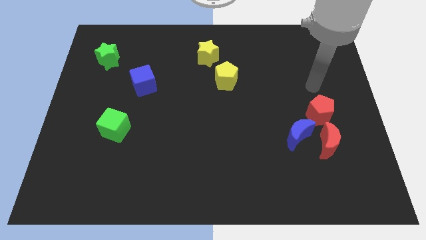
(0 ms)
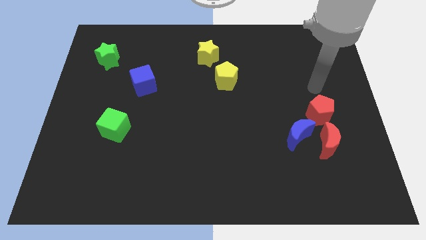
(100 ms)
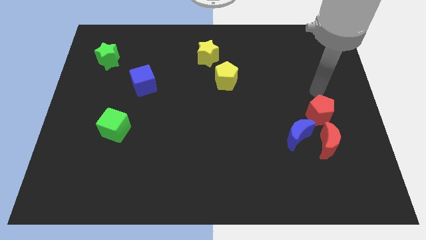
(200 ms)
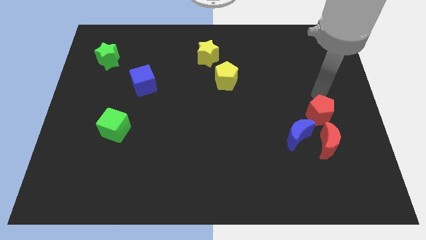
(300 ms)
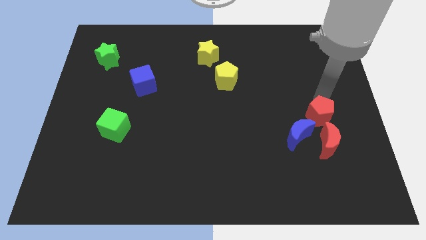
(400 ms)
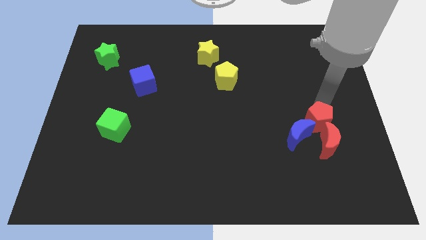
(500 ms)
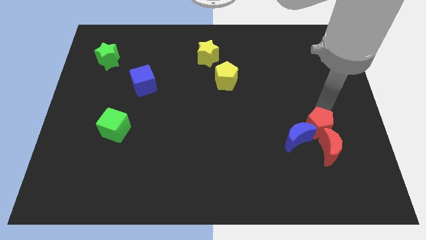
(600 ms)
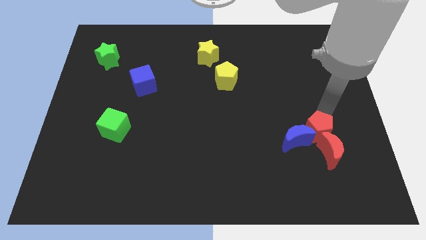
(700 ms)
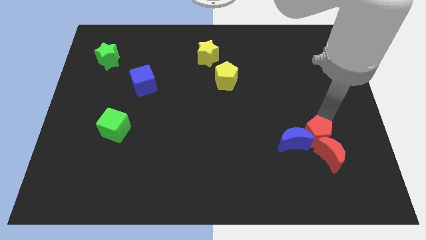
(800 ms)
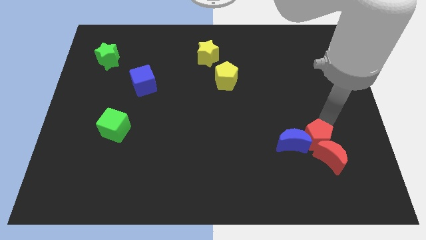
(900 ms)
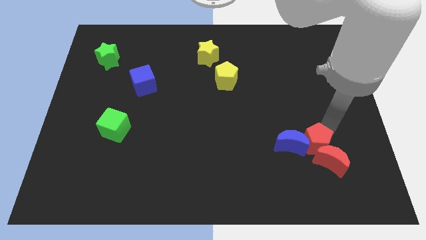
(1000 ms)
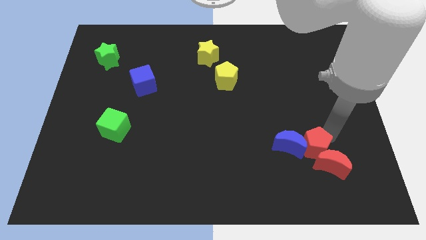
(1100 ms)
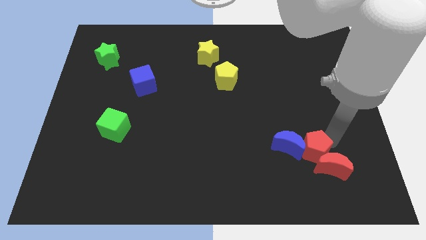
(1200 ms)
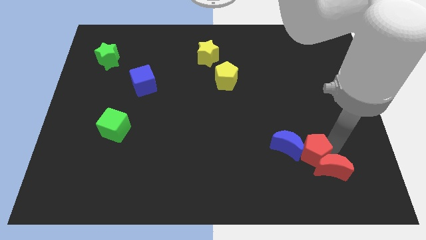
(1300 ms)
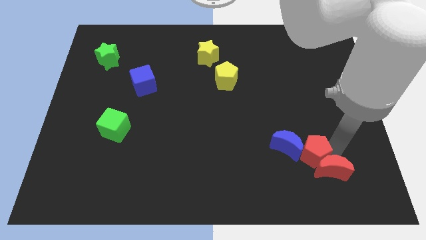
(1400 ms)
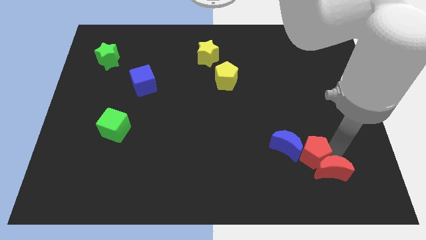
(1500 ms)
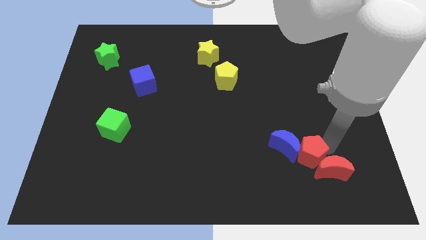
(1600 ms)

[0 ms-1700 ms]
slide the red pentagon in between the blue moon and red crescent

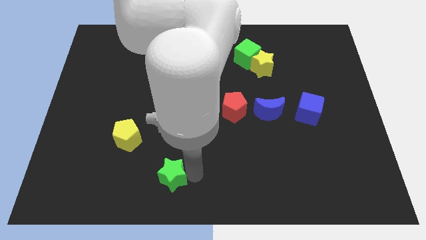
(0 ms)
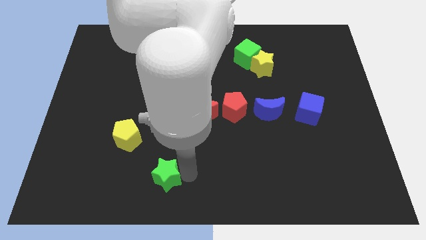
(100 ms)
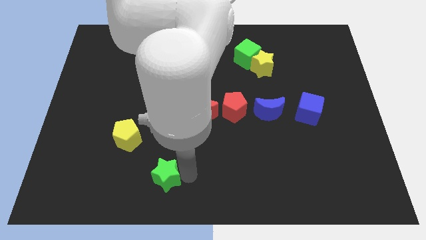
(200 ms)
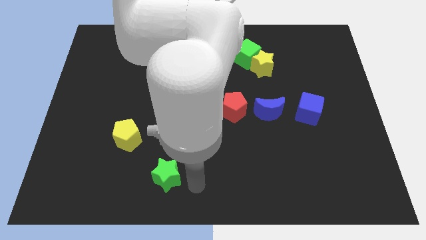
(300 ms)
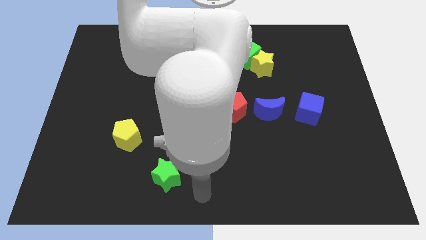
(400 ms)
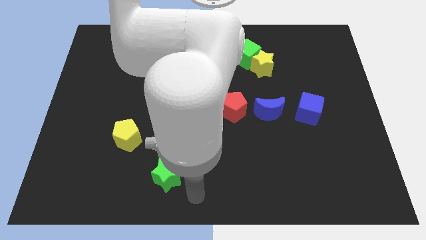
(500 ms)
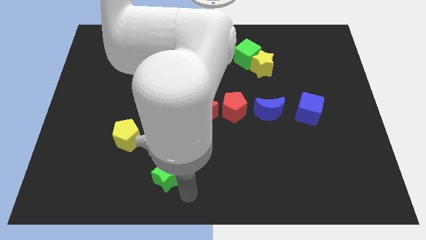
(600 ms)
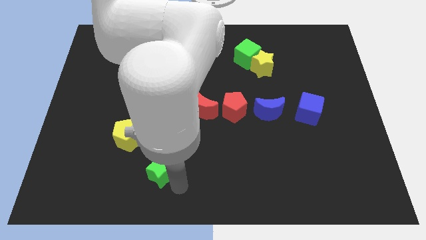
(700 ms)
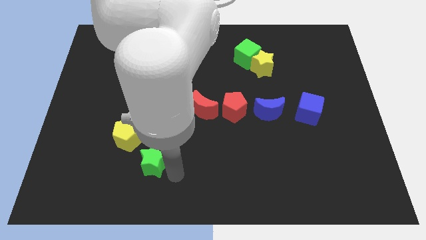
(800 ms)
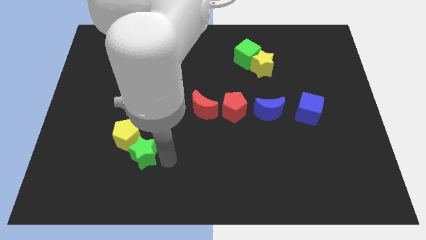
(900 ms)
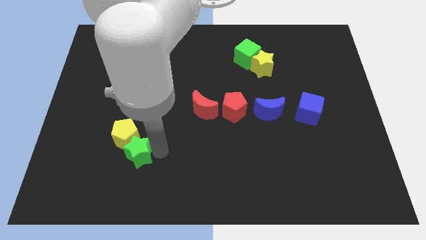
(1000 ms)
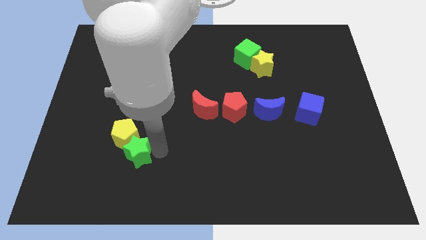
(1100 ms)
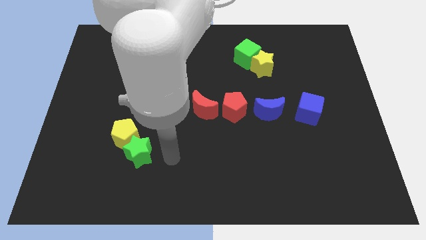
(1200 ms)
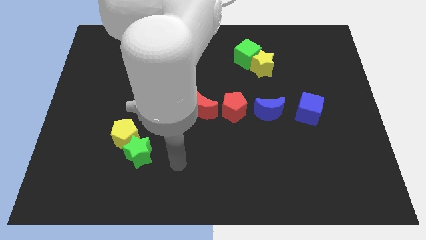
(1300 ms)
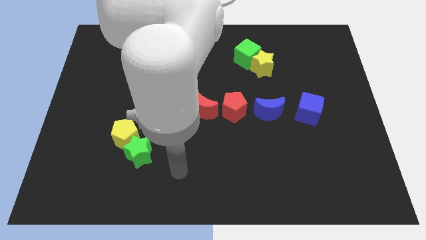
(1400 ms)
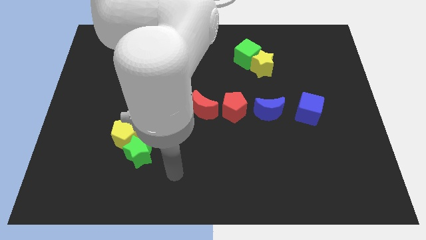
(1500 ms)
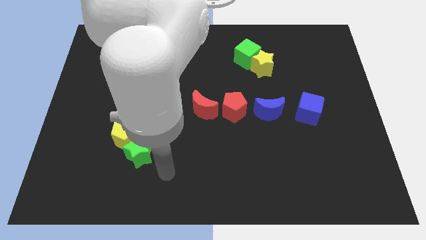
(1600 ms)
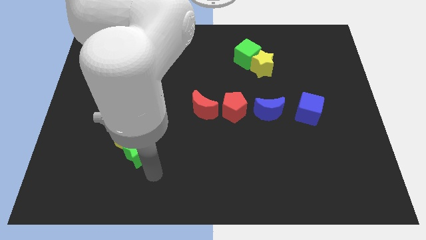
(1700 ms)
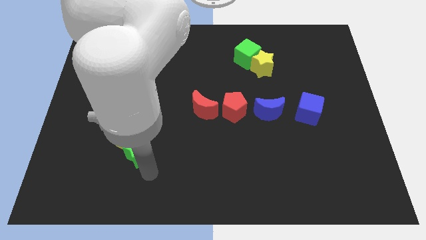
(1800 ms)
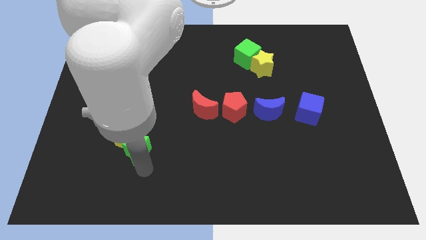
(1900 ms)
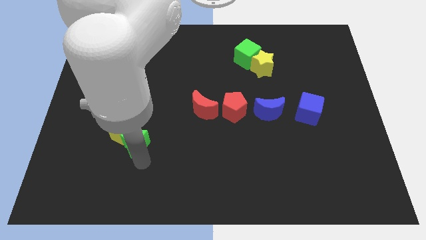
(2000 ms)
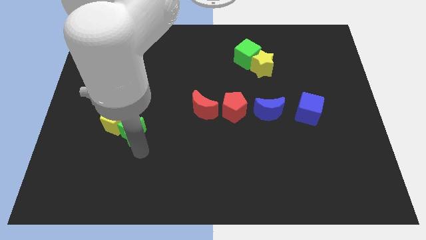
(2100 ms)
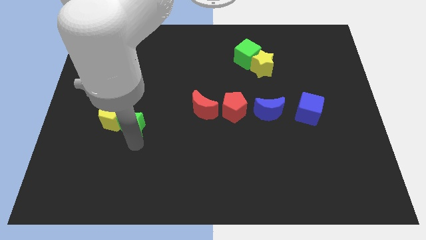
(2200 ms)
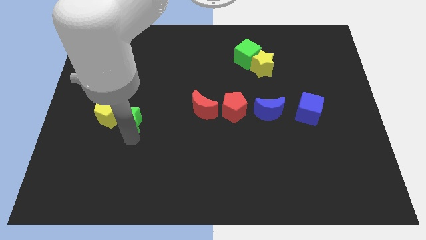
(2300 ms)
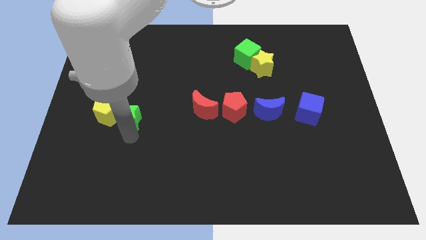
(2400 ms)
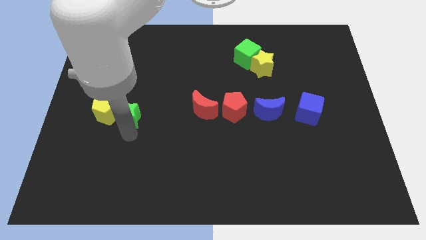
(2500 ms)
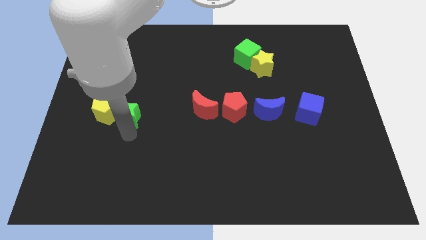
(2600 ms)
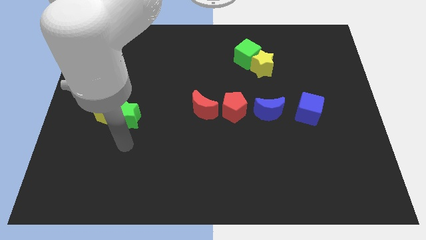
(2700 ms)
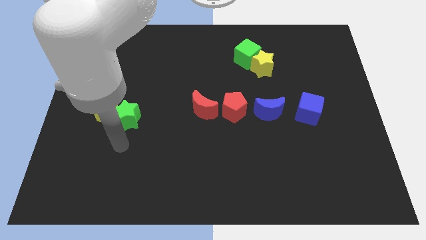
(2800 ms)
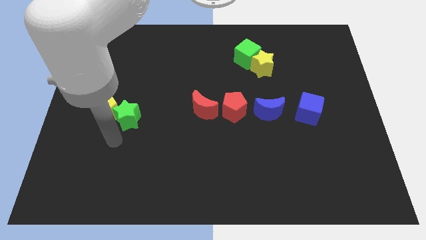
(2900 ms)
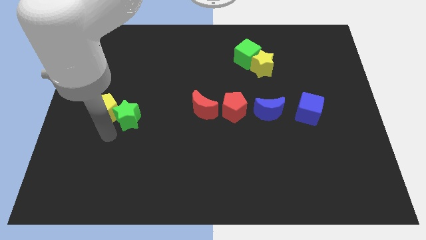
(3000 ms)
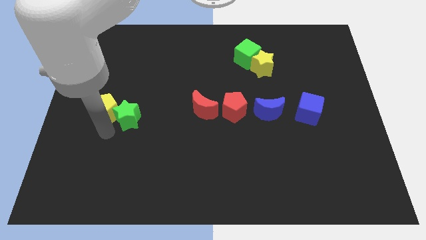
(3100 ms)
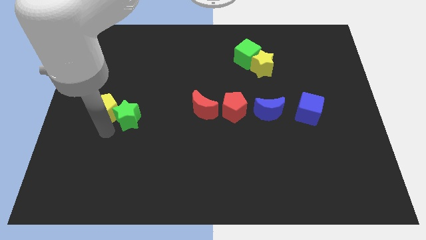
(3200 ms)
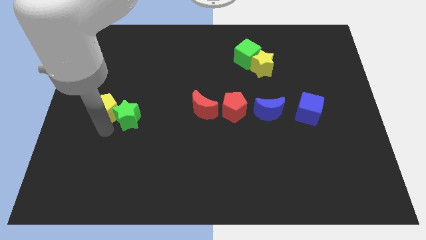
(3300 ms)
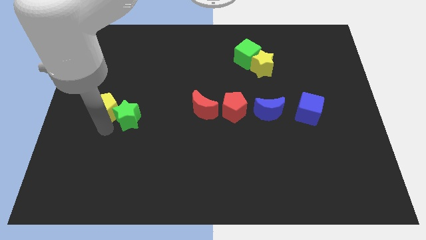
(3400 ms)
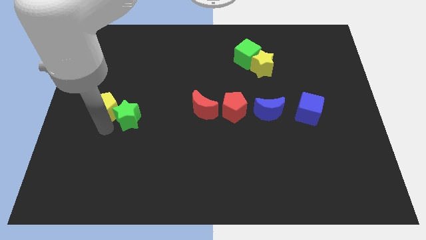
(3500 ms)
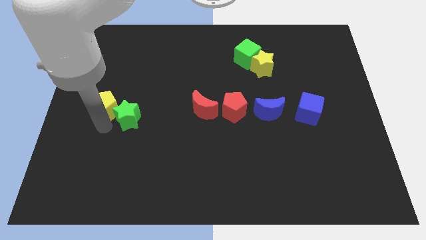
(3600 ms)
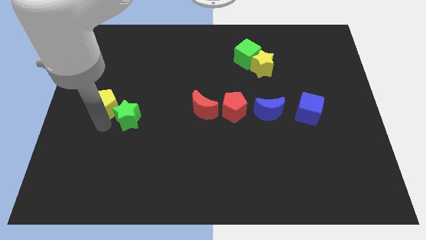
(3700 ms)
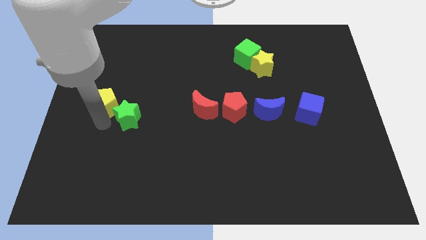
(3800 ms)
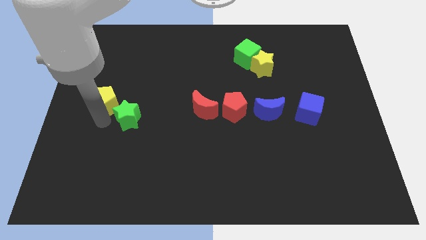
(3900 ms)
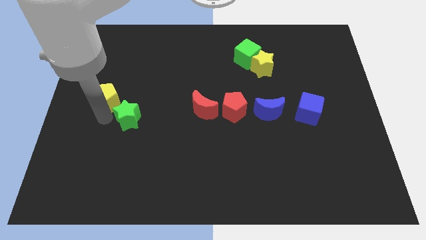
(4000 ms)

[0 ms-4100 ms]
move the green star and yellow pentagon towards center left

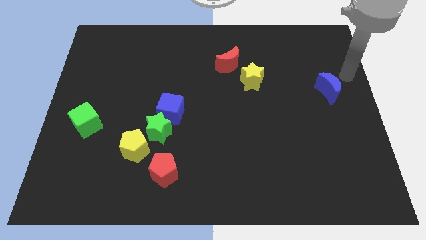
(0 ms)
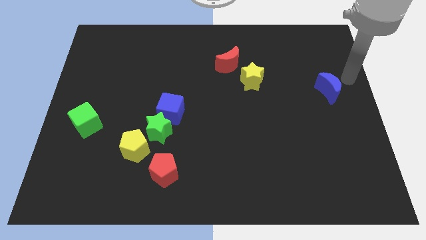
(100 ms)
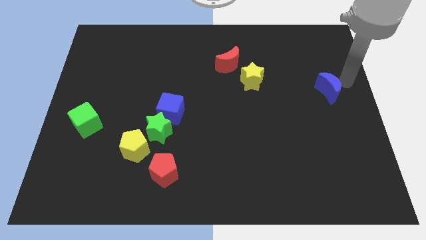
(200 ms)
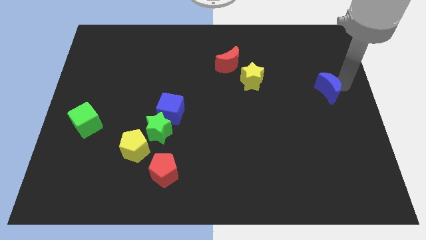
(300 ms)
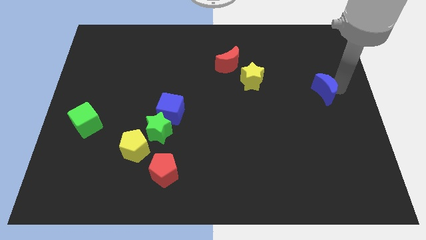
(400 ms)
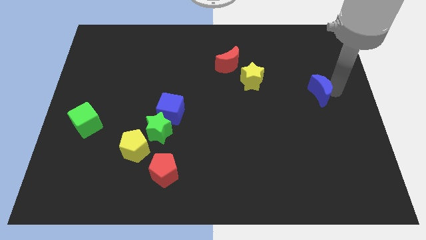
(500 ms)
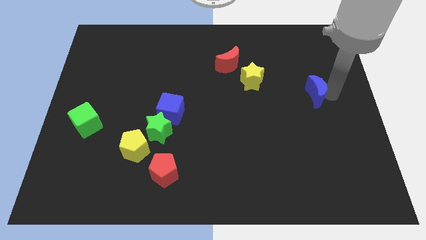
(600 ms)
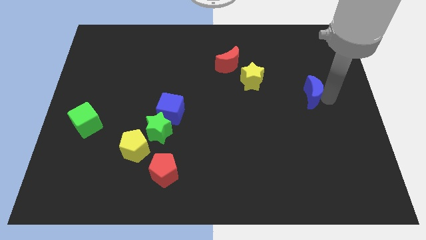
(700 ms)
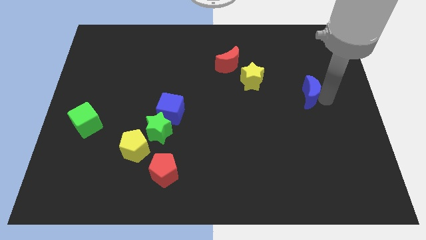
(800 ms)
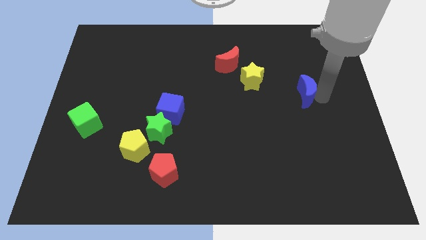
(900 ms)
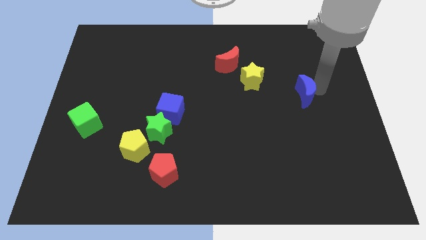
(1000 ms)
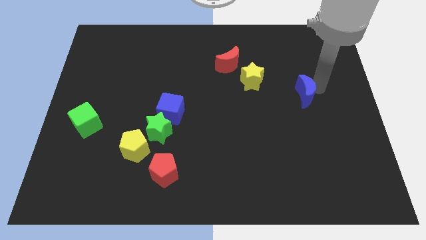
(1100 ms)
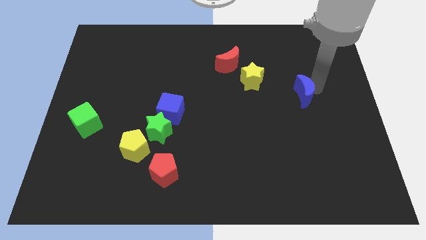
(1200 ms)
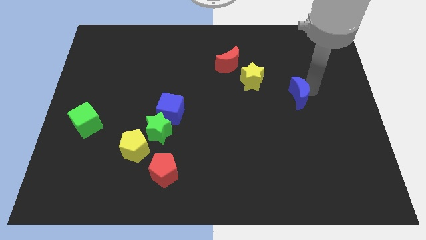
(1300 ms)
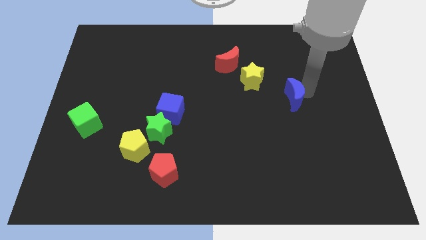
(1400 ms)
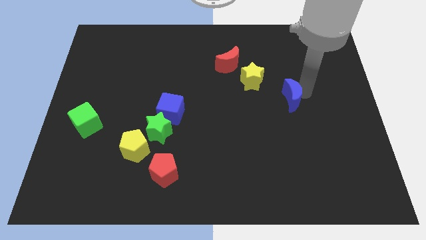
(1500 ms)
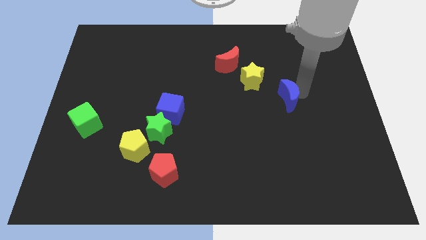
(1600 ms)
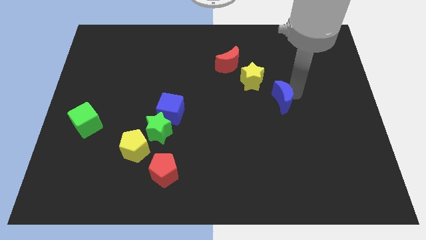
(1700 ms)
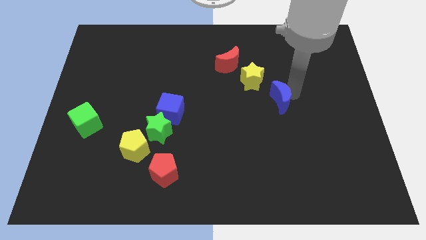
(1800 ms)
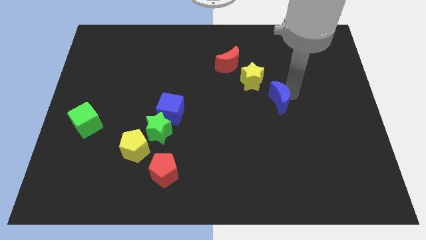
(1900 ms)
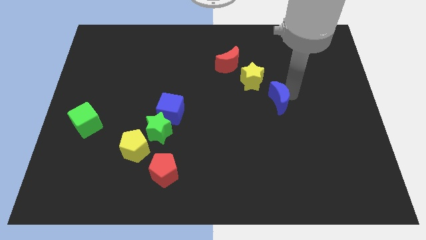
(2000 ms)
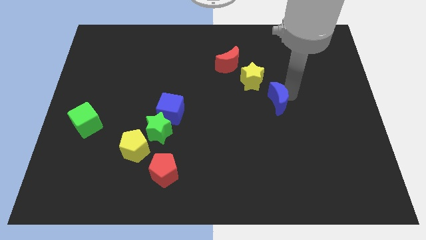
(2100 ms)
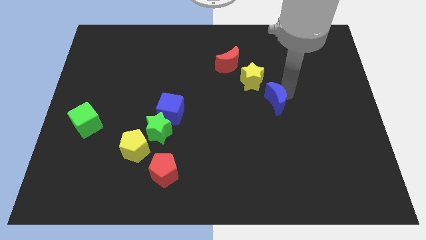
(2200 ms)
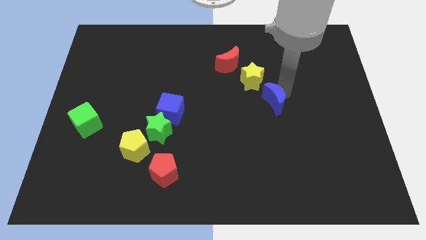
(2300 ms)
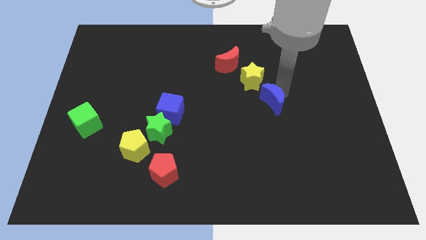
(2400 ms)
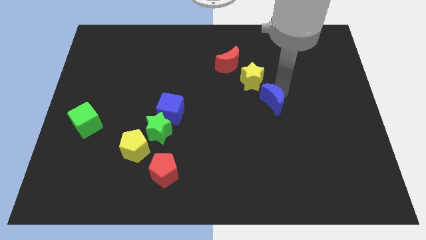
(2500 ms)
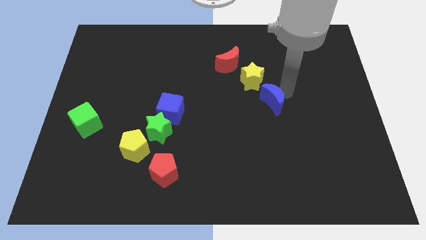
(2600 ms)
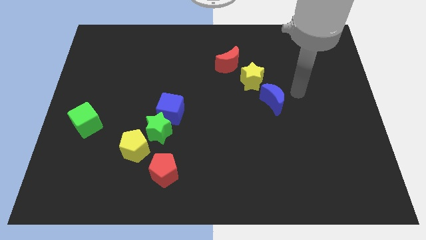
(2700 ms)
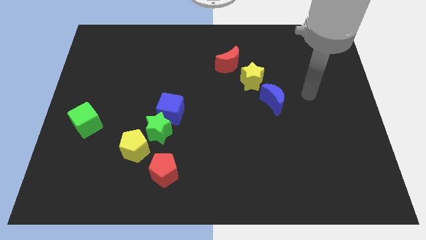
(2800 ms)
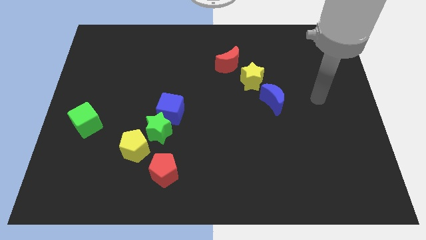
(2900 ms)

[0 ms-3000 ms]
move blue crescent towards yellow star

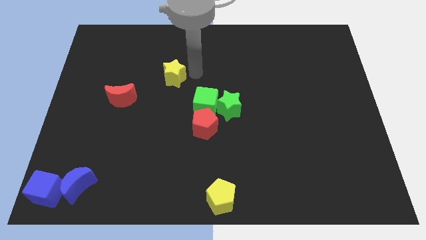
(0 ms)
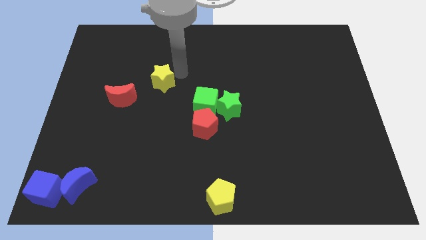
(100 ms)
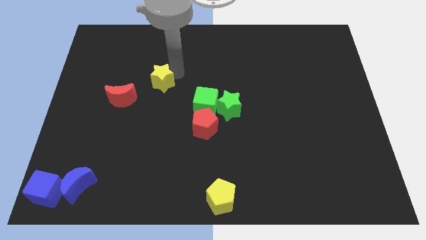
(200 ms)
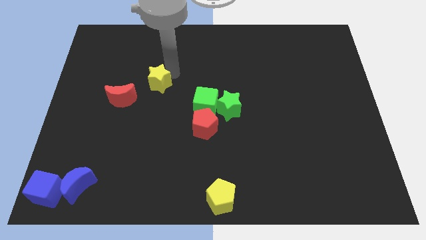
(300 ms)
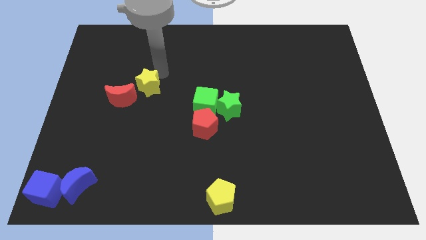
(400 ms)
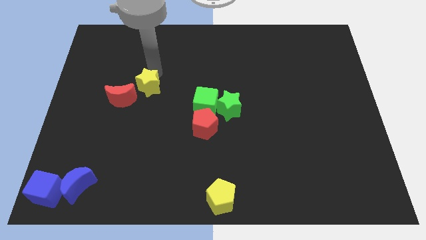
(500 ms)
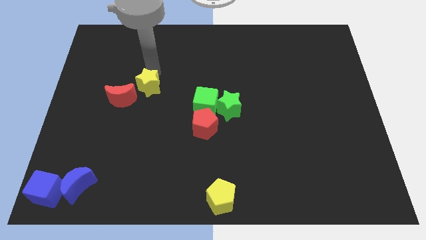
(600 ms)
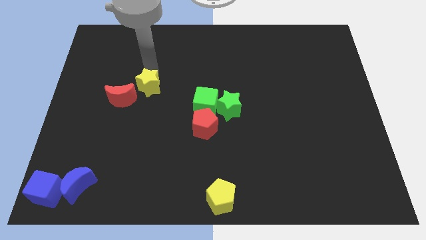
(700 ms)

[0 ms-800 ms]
push the yellow star to the right of the red crescent
